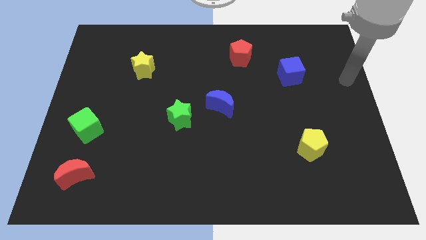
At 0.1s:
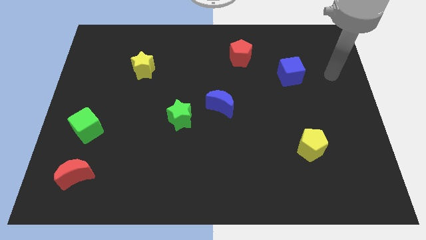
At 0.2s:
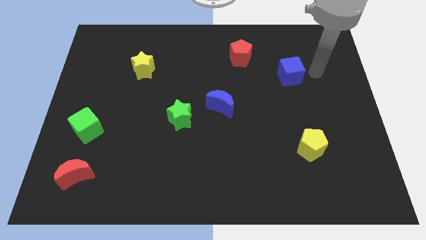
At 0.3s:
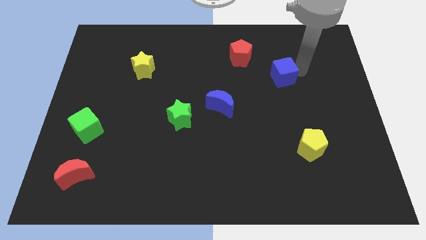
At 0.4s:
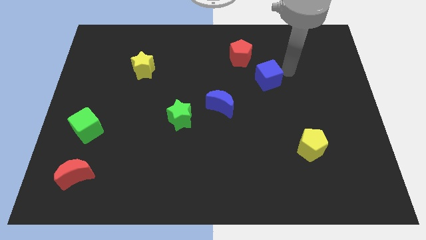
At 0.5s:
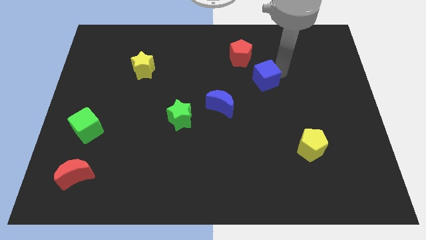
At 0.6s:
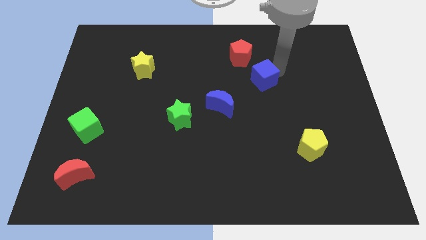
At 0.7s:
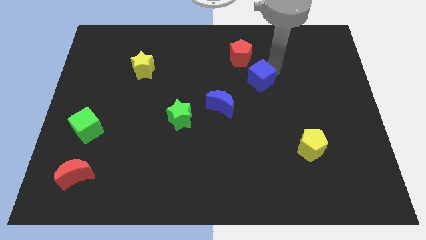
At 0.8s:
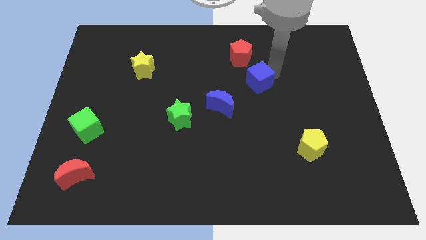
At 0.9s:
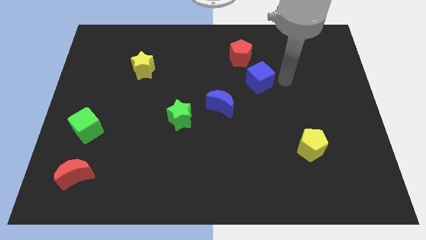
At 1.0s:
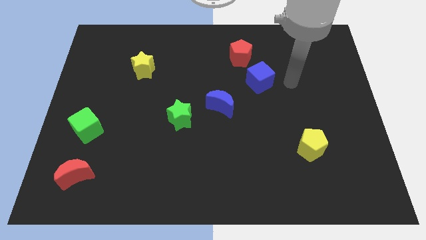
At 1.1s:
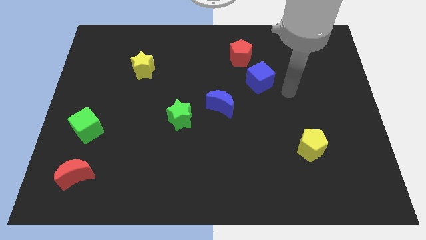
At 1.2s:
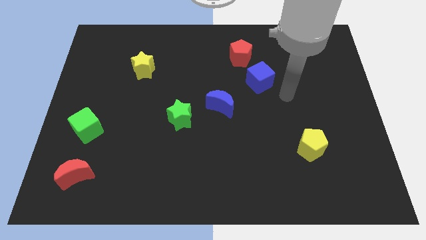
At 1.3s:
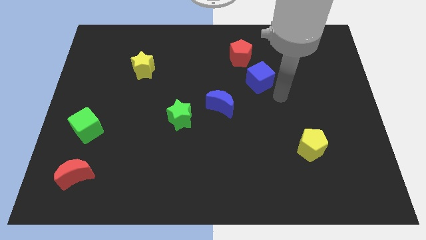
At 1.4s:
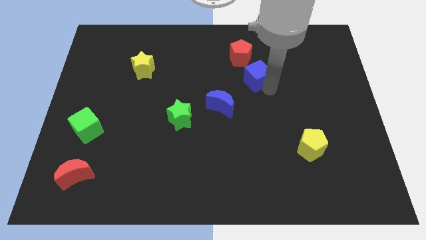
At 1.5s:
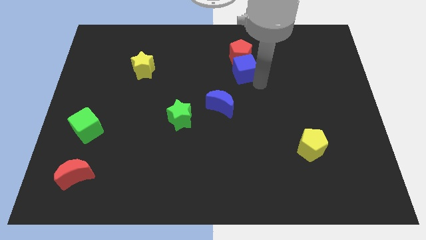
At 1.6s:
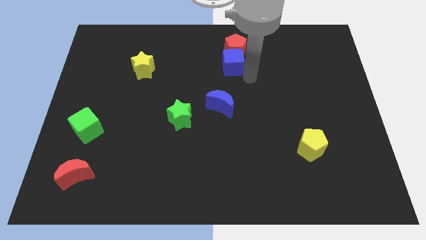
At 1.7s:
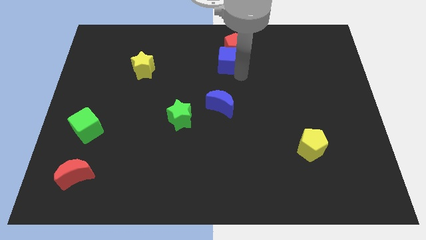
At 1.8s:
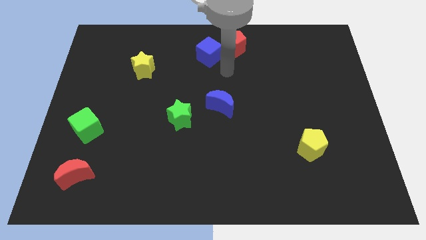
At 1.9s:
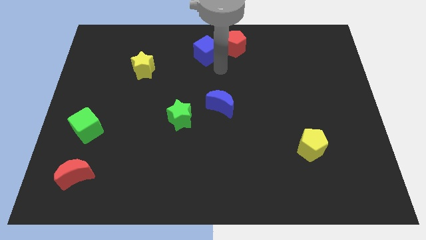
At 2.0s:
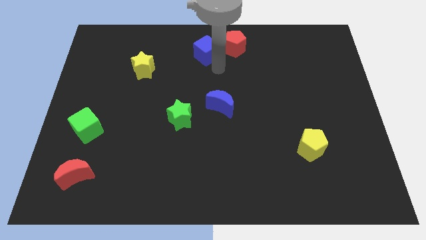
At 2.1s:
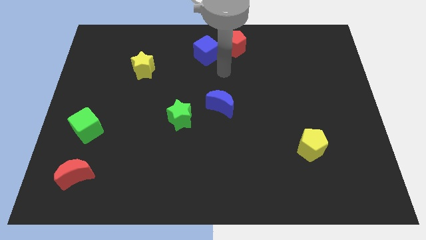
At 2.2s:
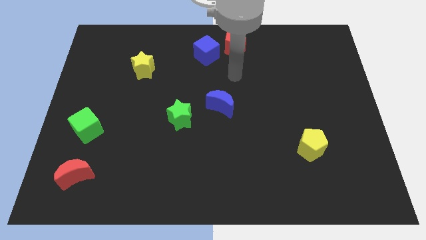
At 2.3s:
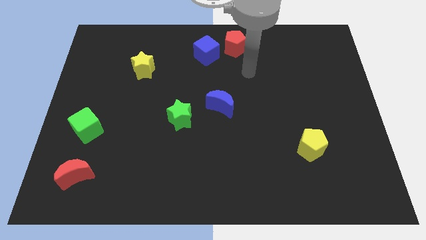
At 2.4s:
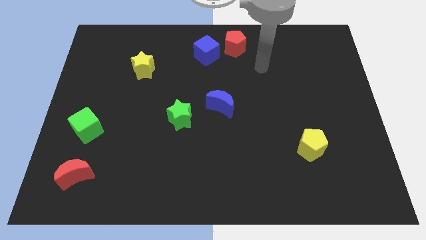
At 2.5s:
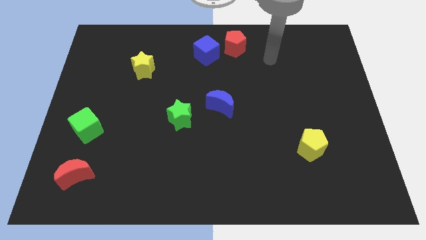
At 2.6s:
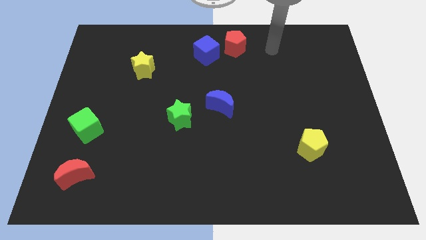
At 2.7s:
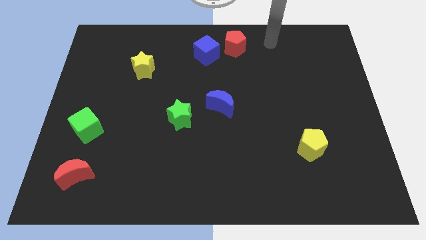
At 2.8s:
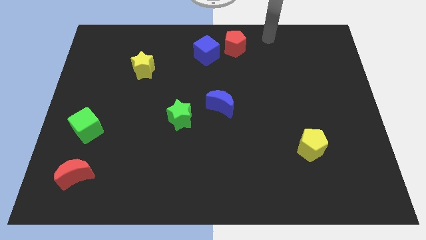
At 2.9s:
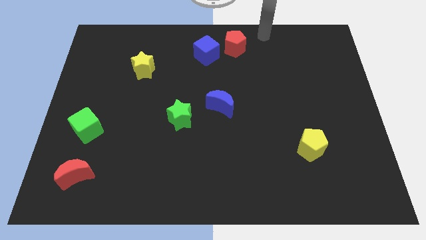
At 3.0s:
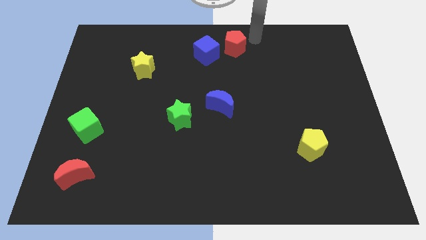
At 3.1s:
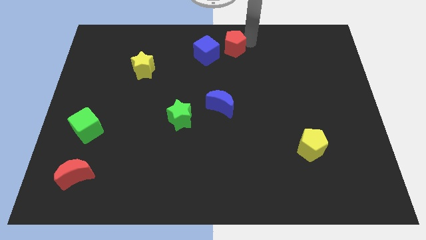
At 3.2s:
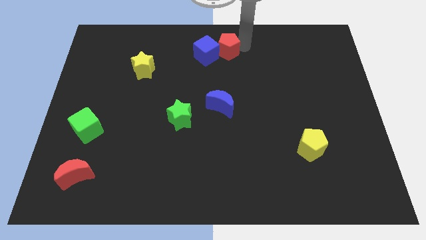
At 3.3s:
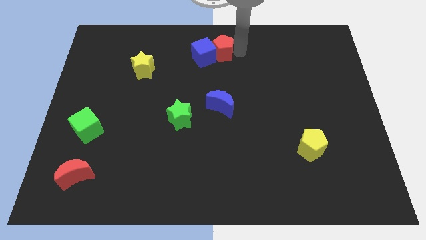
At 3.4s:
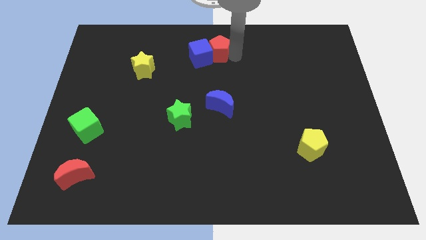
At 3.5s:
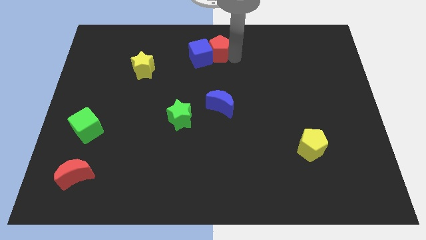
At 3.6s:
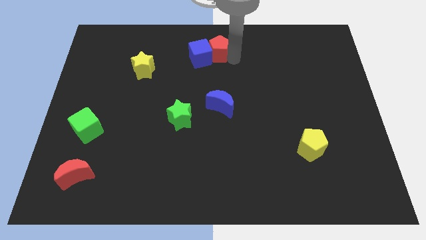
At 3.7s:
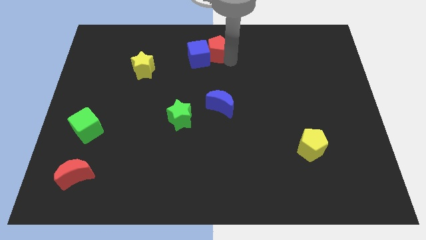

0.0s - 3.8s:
place red pentagon above blue crescent

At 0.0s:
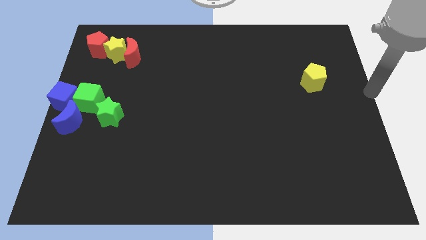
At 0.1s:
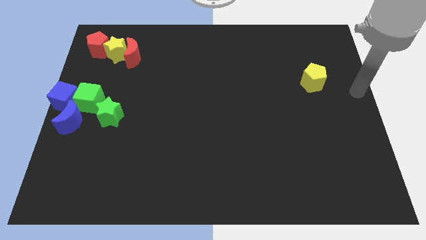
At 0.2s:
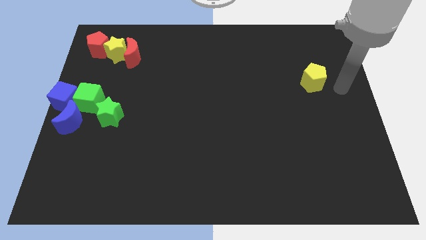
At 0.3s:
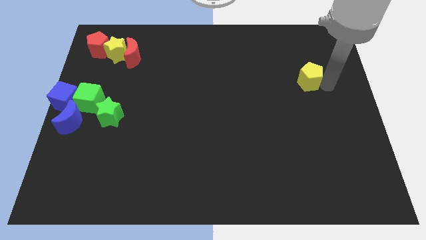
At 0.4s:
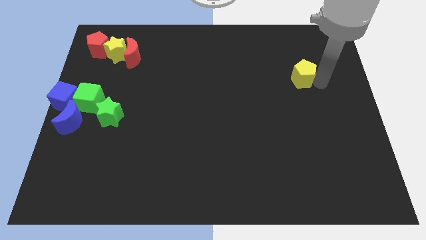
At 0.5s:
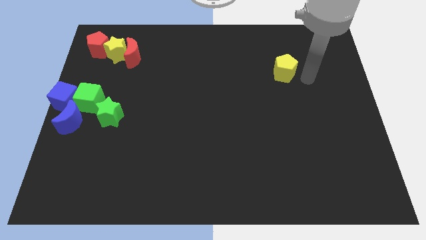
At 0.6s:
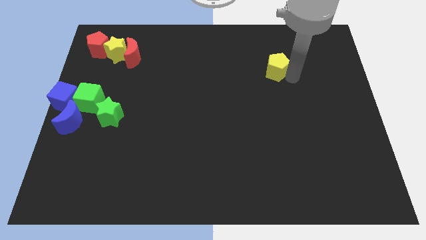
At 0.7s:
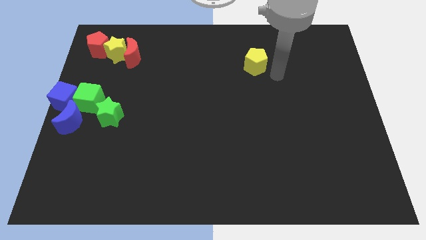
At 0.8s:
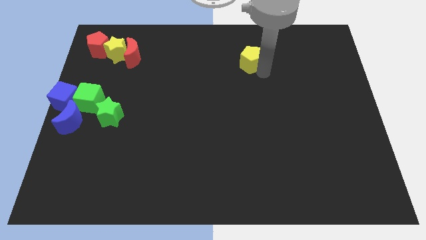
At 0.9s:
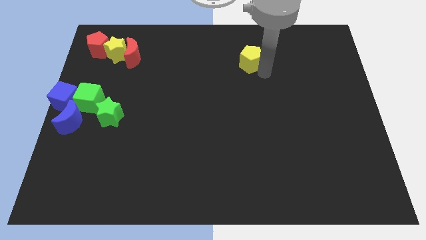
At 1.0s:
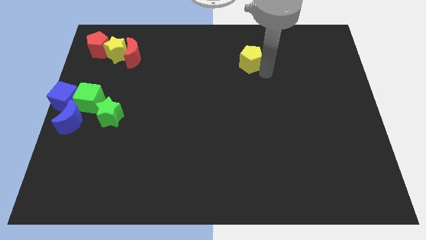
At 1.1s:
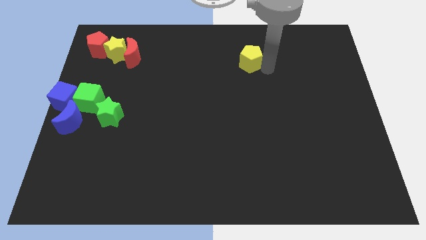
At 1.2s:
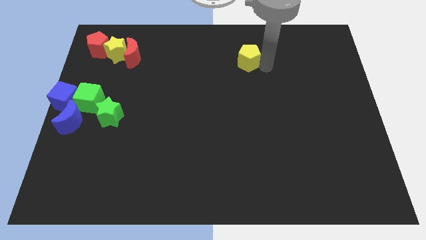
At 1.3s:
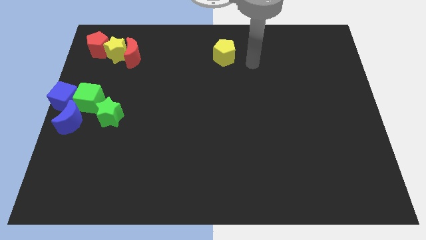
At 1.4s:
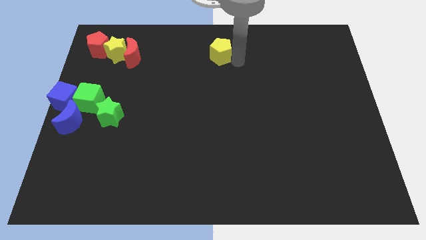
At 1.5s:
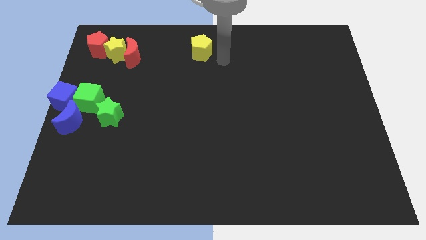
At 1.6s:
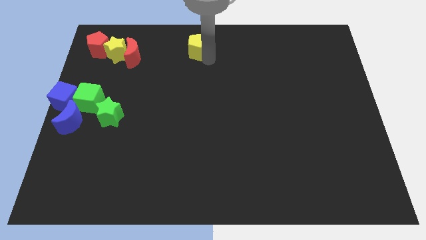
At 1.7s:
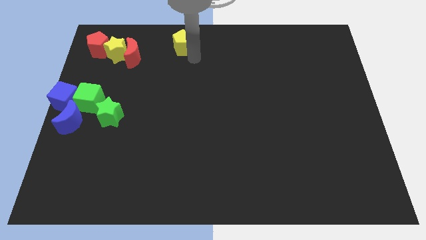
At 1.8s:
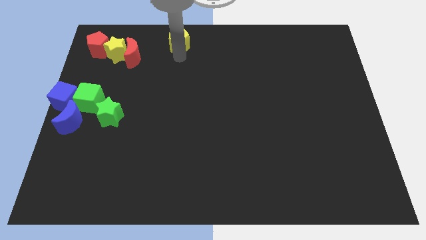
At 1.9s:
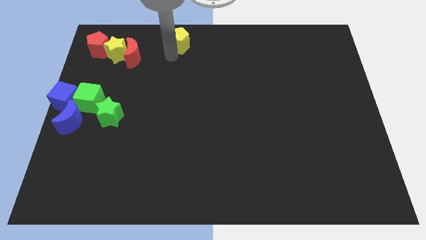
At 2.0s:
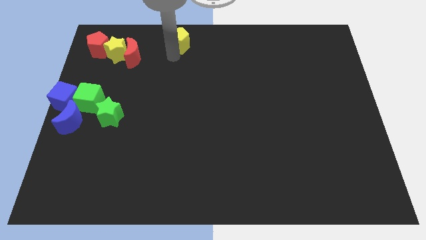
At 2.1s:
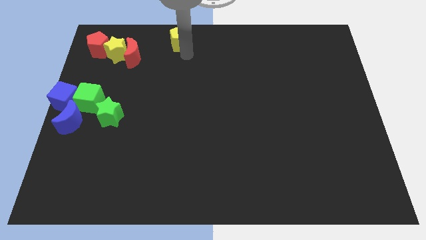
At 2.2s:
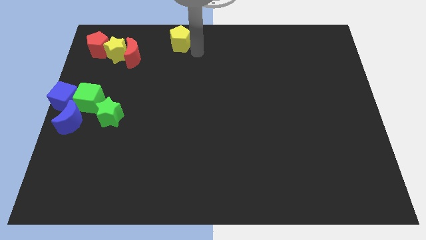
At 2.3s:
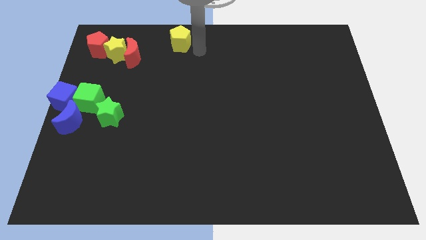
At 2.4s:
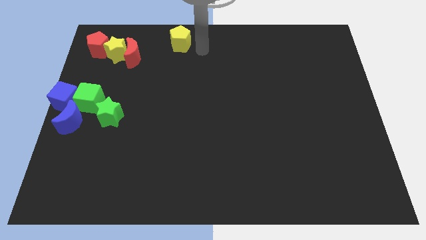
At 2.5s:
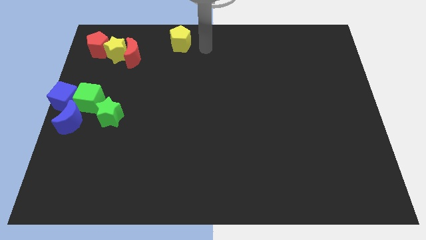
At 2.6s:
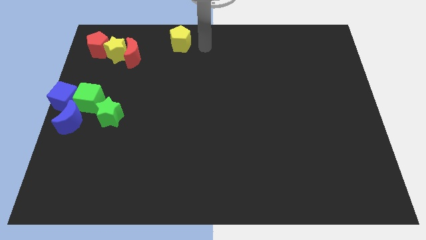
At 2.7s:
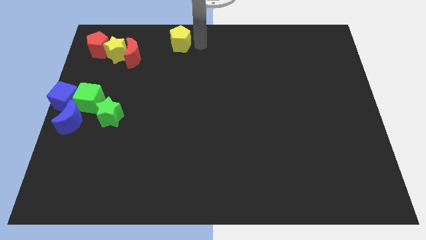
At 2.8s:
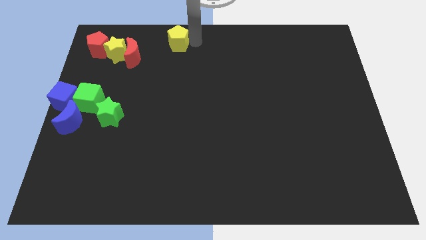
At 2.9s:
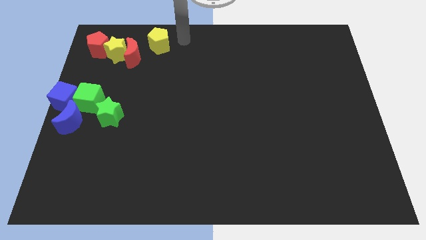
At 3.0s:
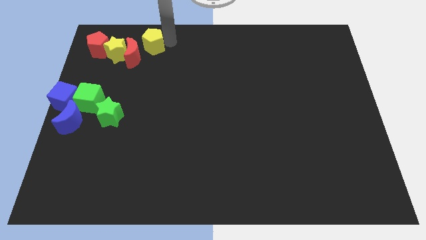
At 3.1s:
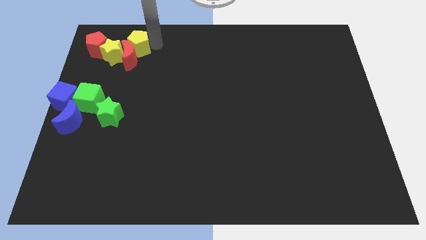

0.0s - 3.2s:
place the yellow pentagon into the group of object

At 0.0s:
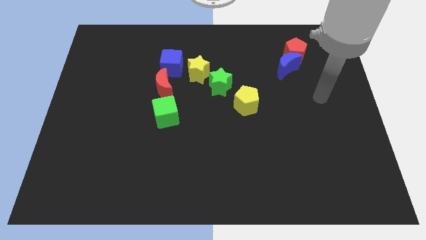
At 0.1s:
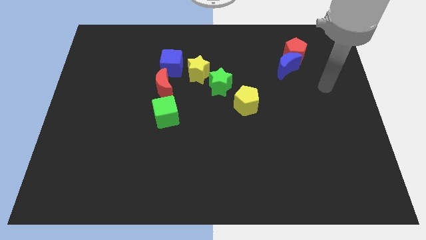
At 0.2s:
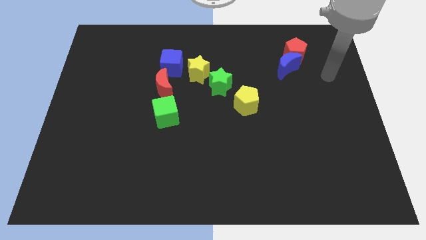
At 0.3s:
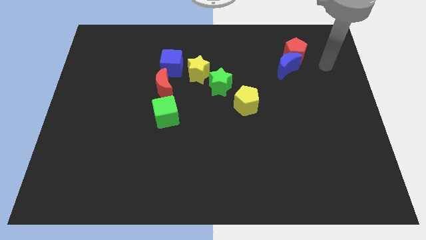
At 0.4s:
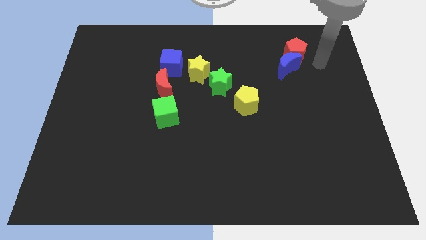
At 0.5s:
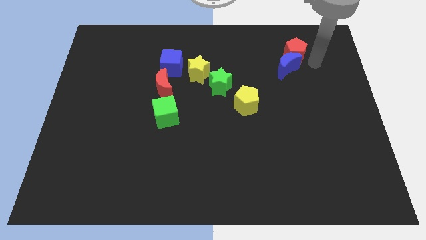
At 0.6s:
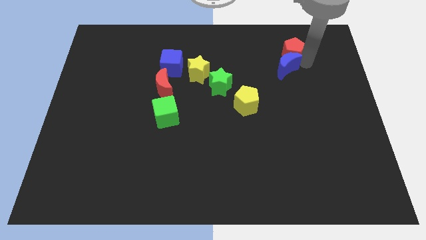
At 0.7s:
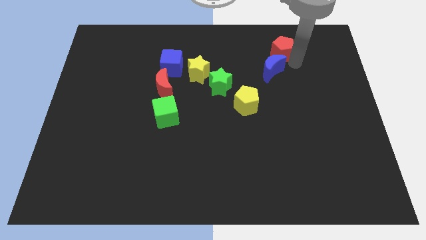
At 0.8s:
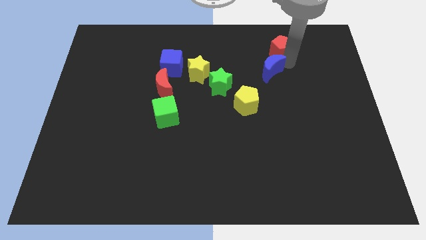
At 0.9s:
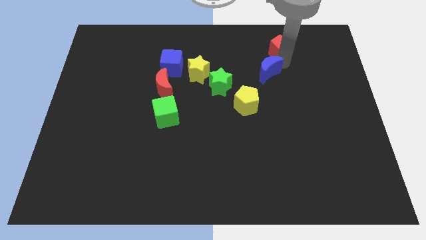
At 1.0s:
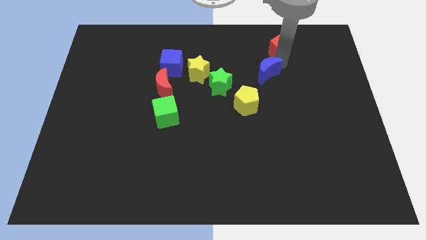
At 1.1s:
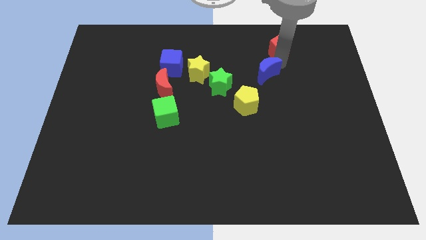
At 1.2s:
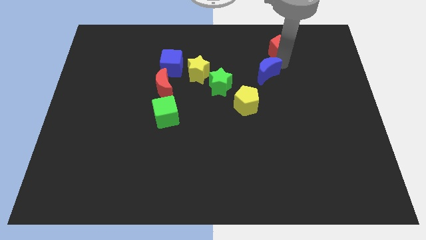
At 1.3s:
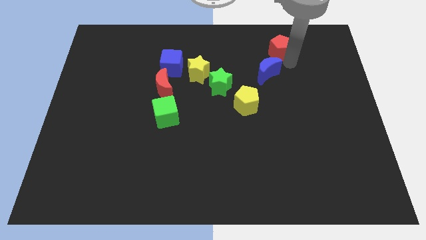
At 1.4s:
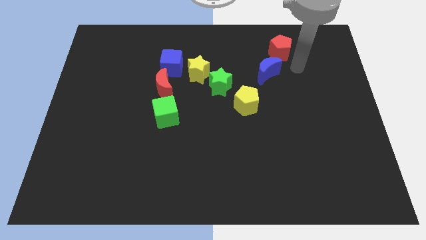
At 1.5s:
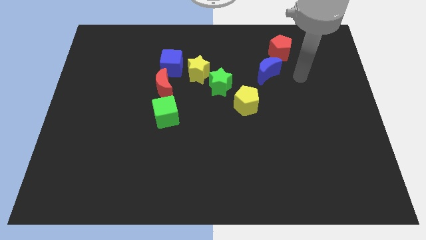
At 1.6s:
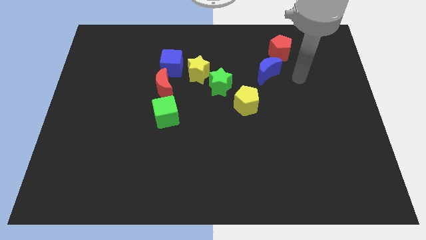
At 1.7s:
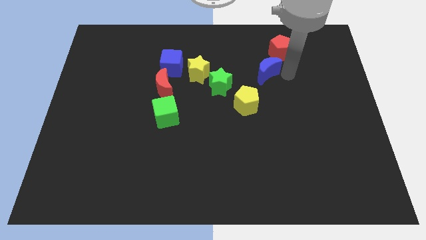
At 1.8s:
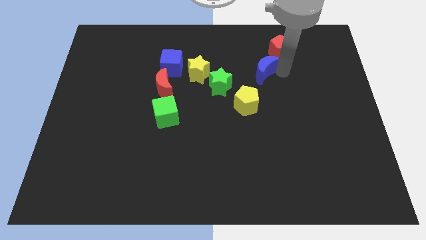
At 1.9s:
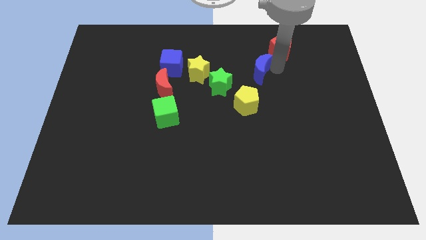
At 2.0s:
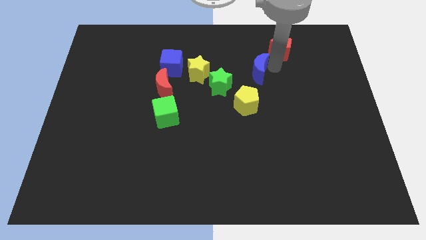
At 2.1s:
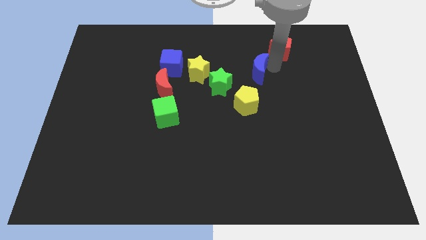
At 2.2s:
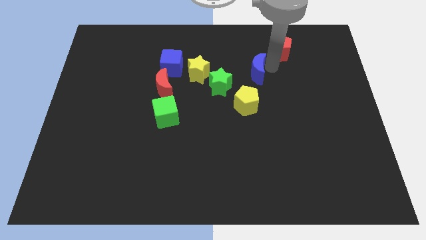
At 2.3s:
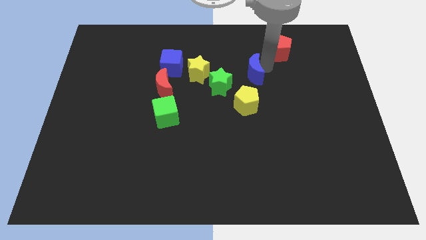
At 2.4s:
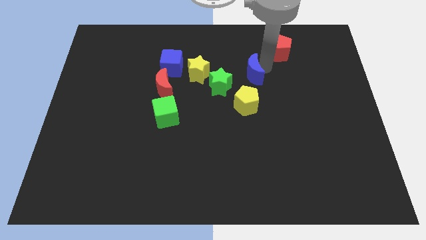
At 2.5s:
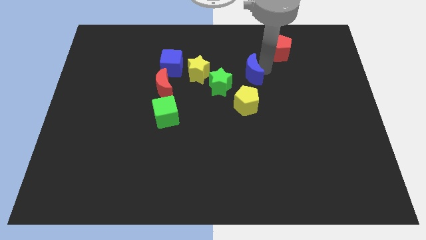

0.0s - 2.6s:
separate the blue moon and red pentagon
